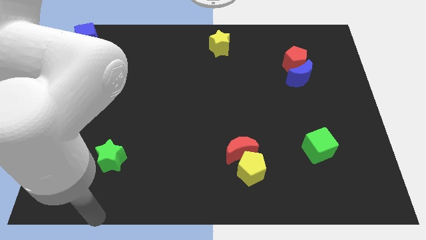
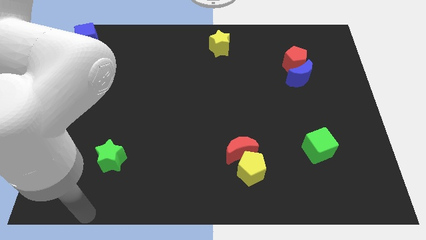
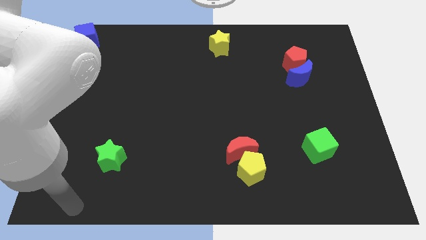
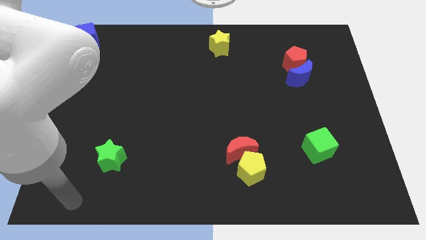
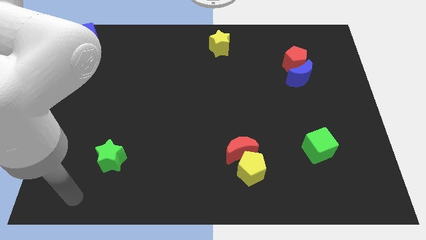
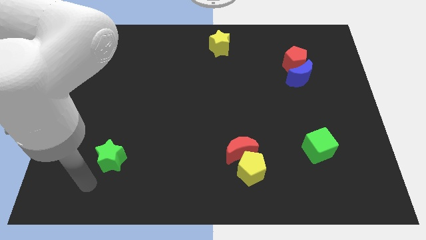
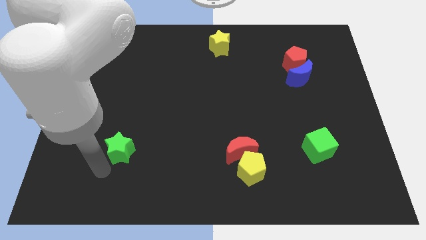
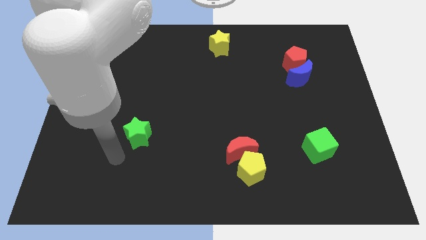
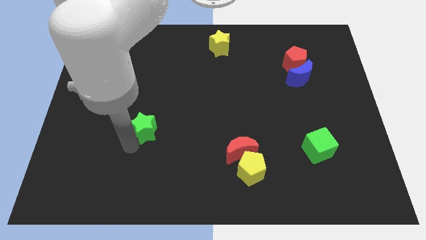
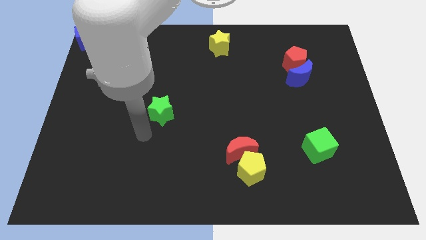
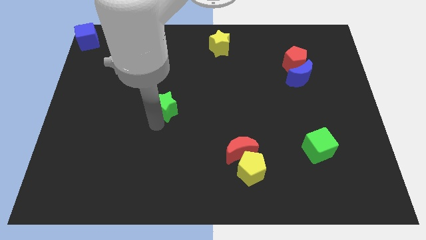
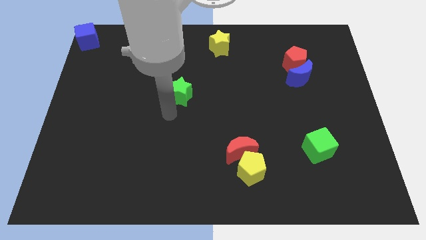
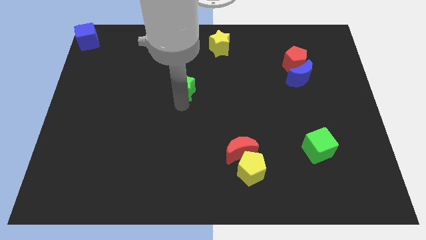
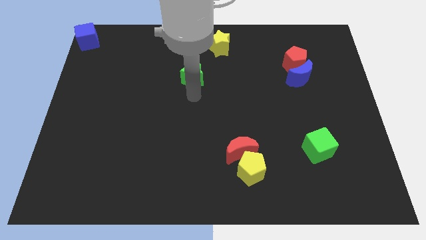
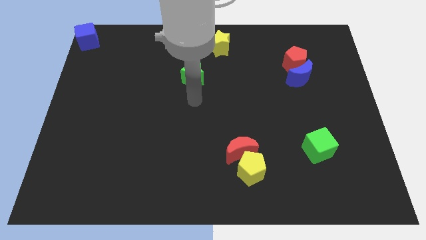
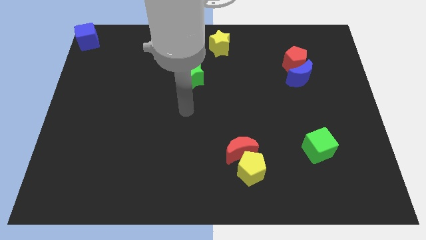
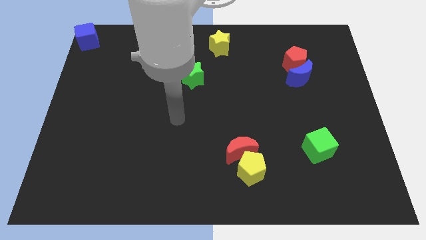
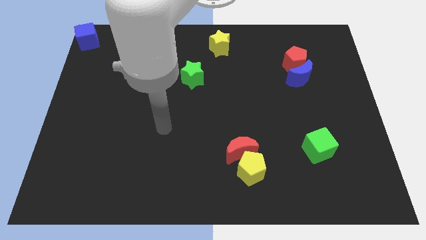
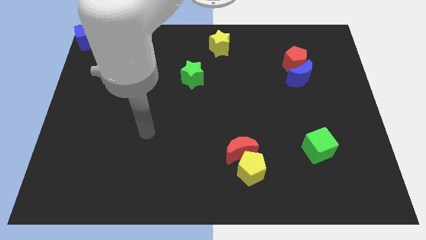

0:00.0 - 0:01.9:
push the green star towards the yellow star

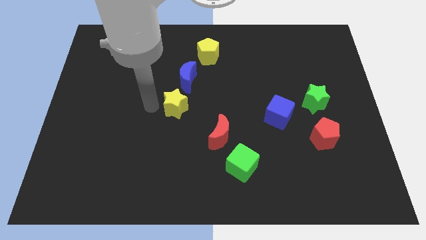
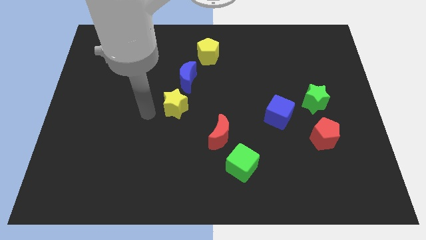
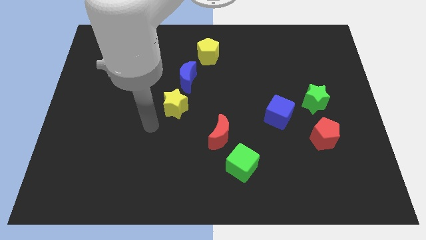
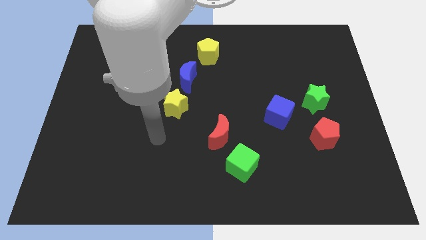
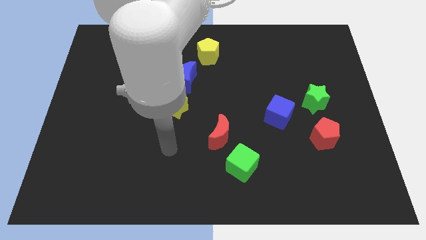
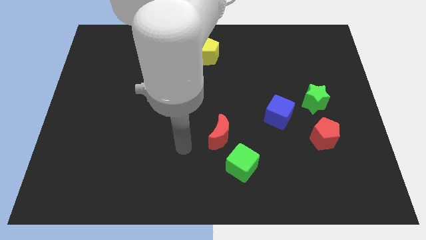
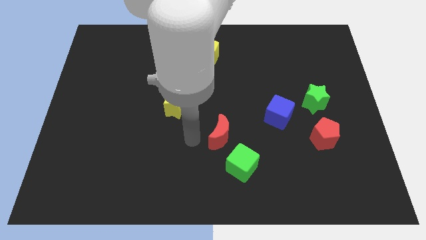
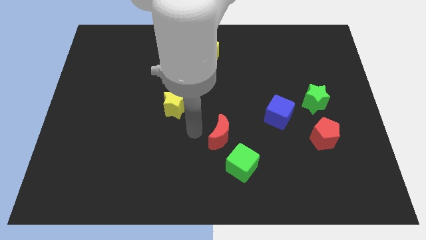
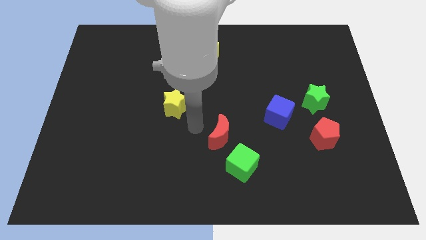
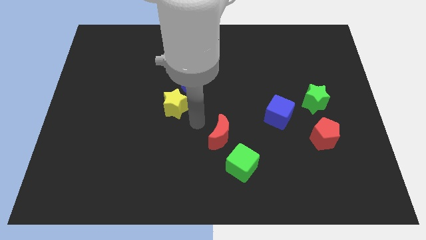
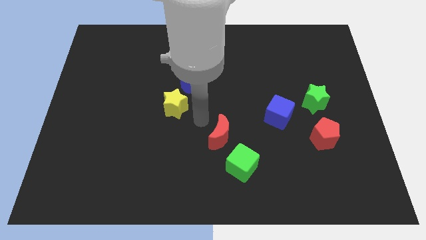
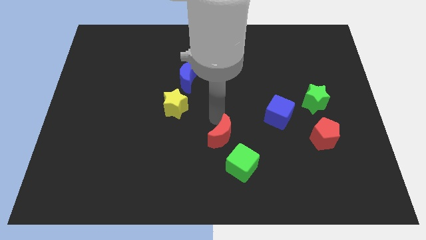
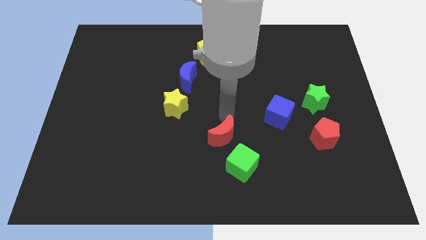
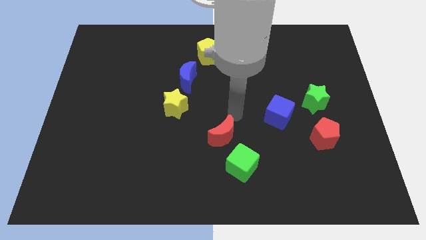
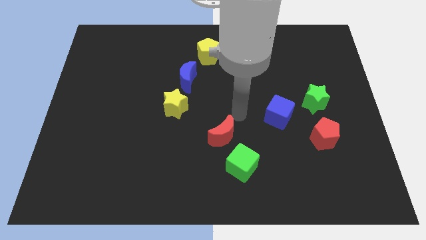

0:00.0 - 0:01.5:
move the red moon slightly to the right

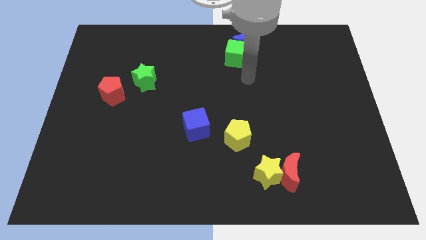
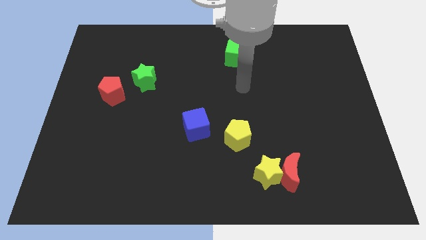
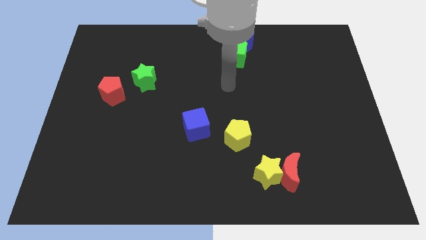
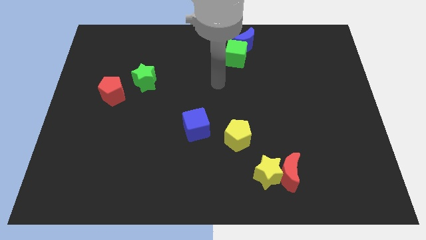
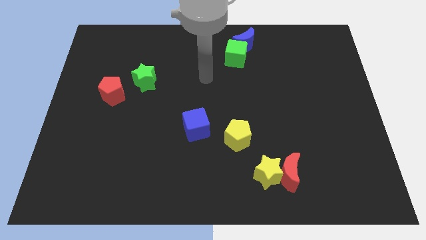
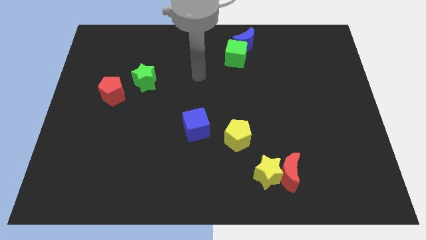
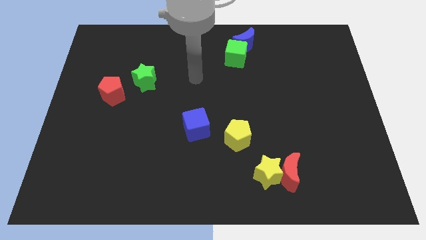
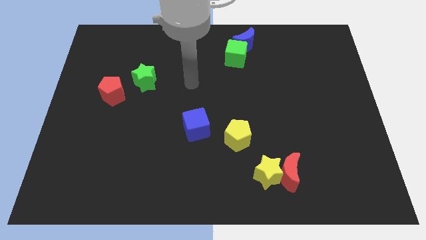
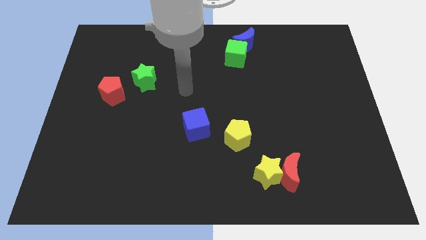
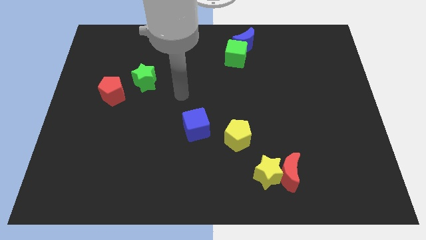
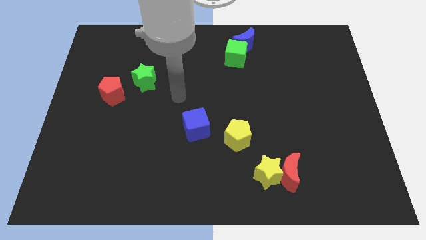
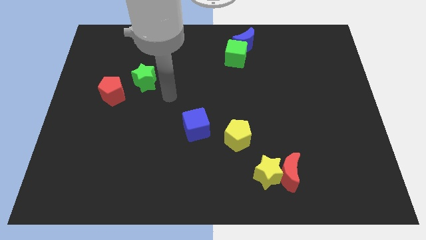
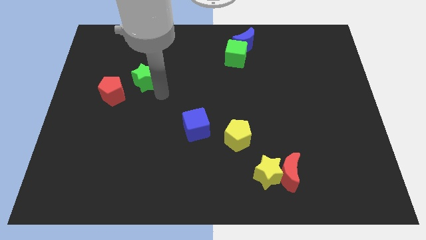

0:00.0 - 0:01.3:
move your arm away from the green cube

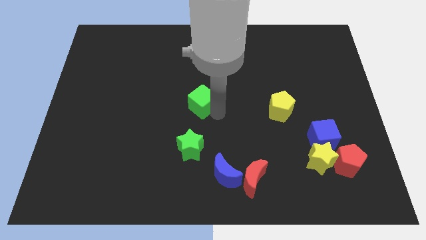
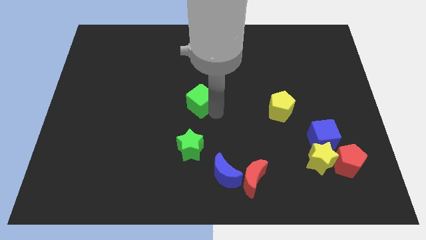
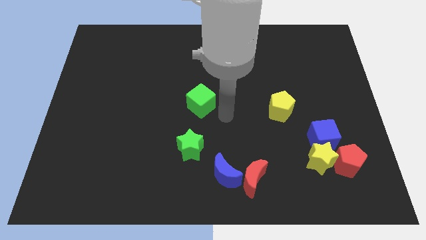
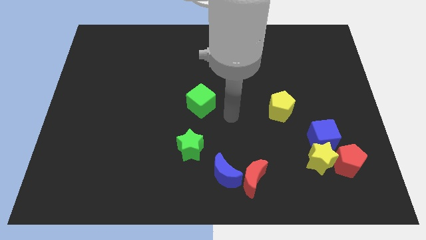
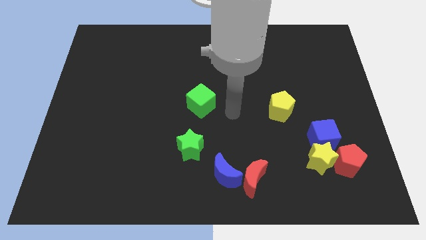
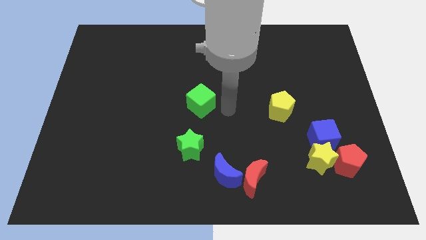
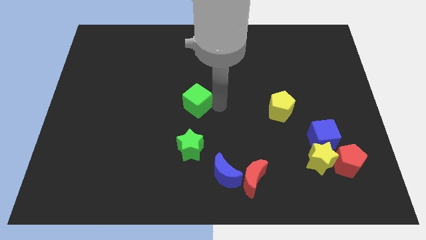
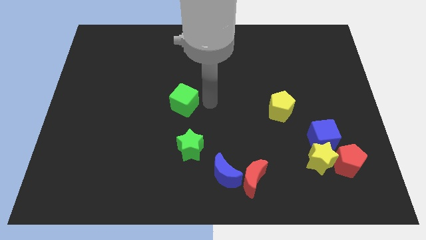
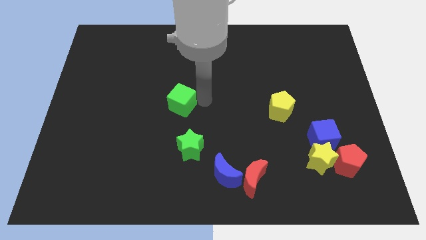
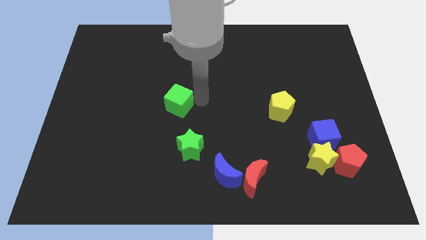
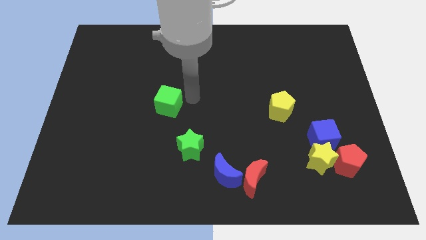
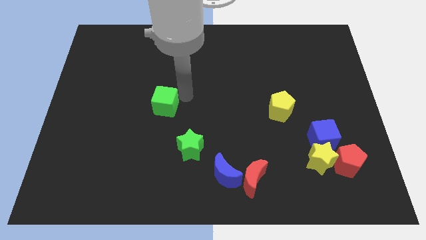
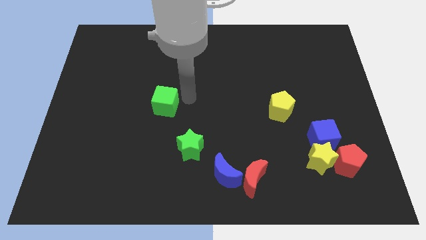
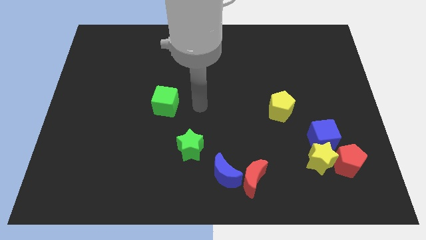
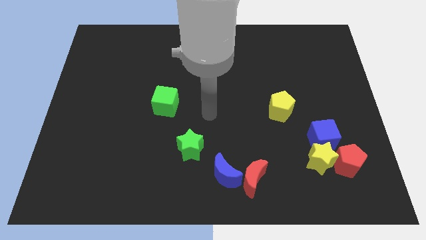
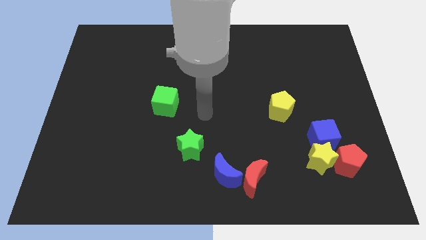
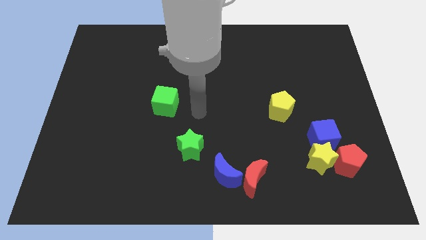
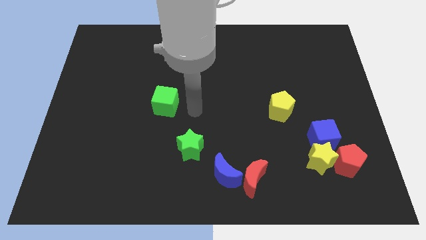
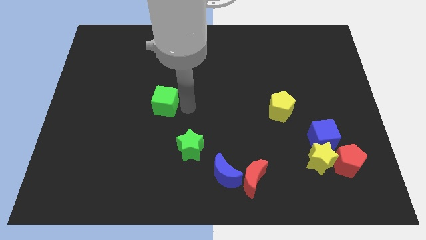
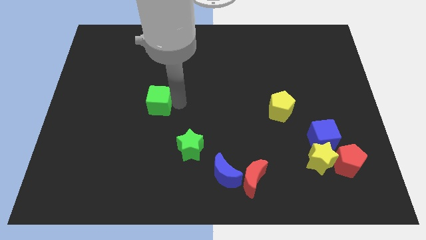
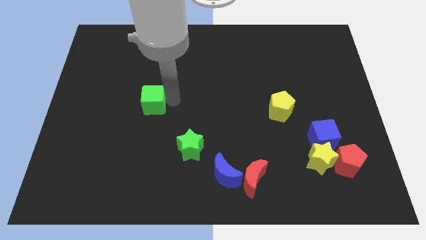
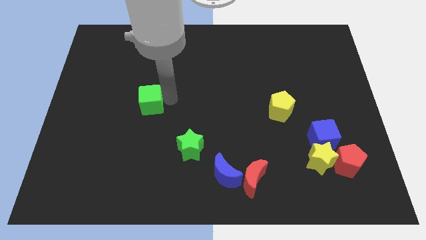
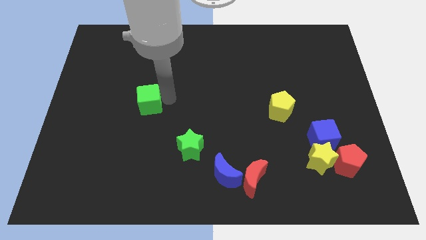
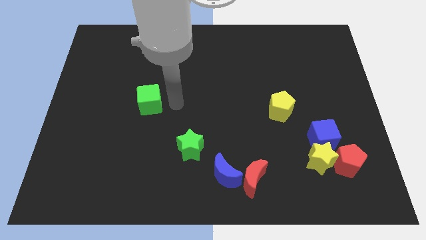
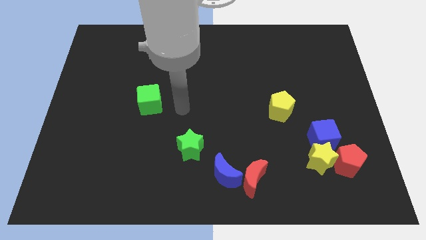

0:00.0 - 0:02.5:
push the green cube to the top left of the green star

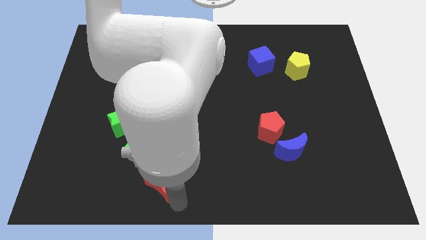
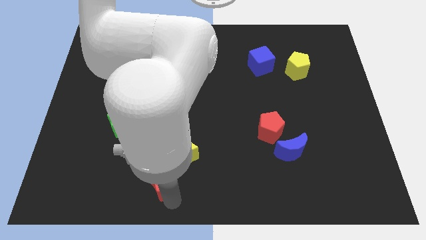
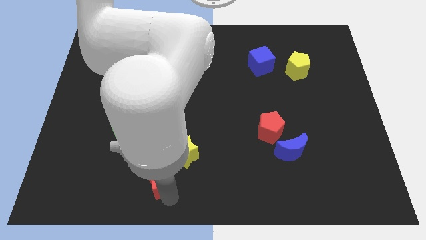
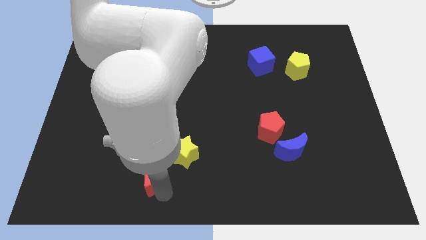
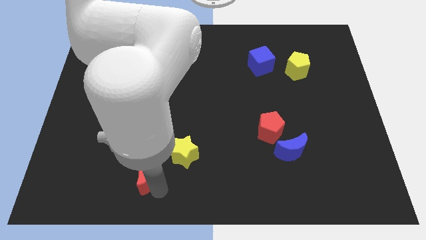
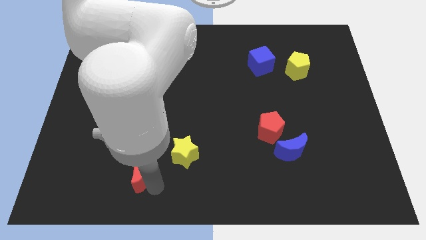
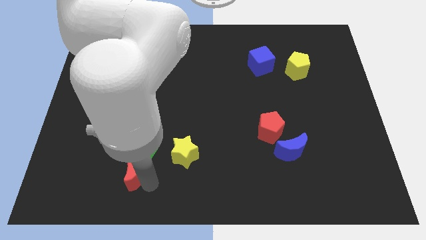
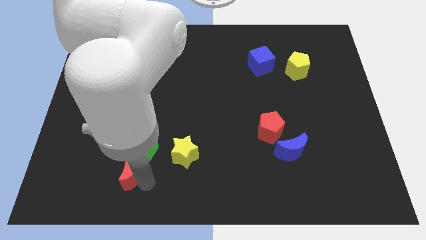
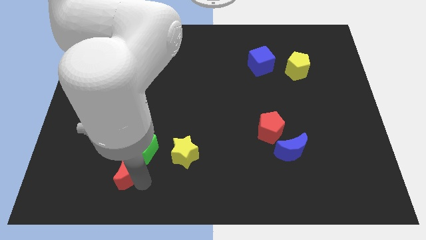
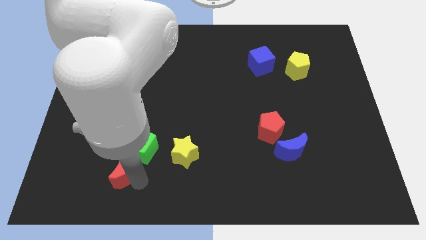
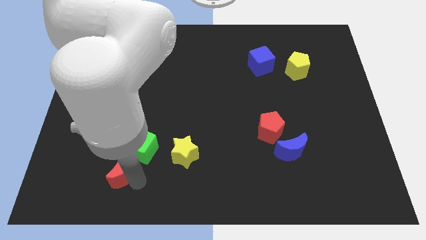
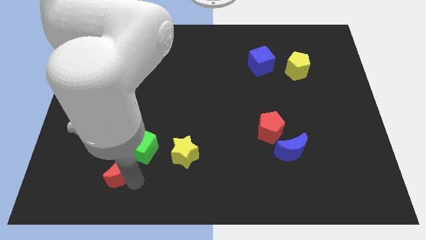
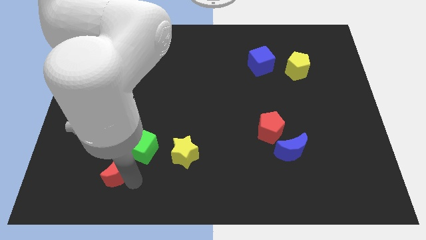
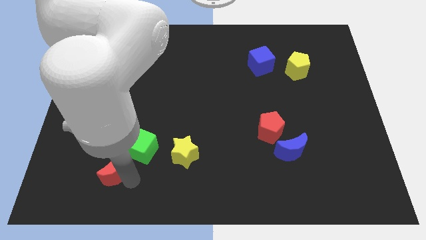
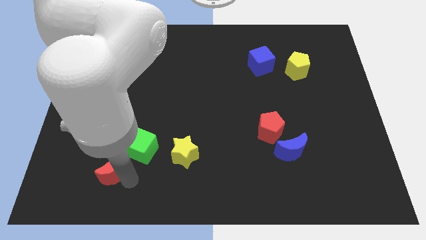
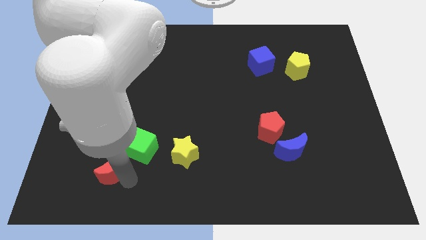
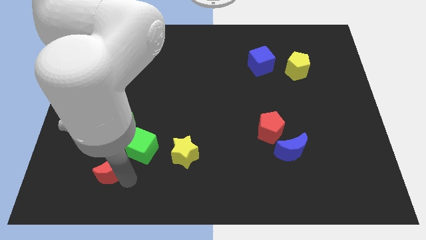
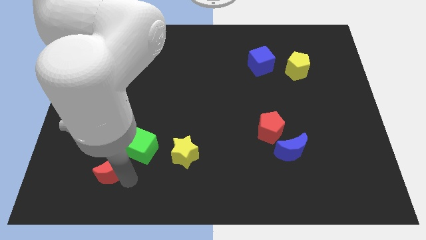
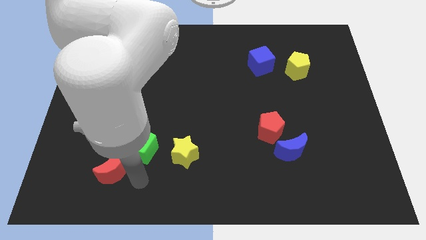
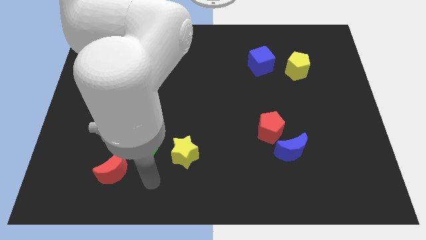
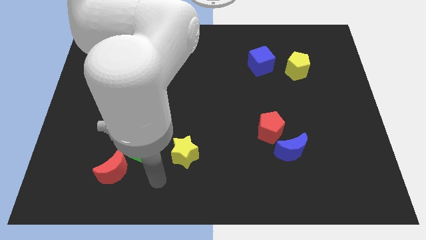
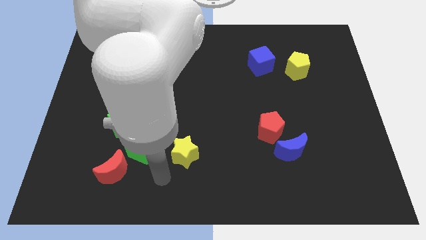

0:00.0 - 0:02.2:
move the red crescent towards the bottom left side of green cube
